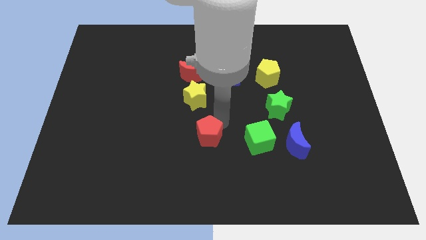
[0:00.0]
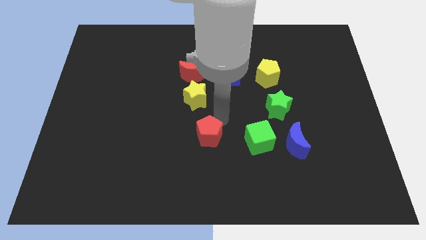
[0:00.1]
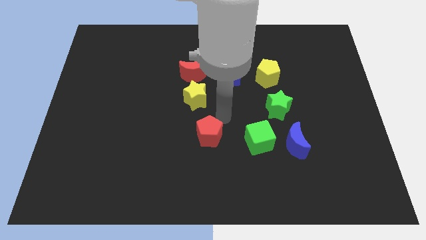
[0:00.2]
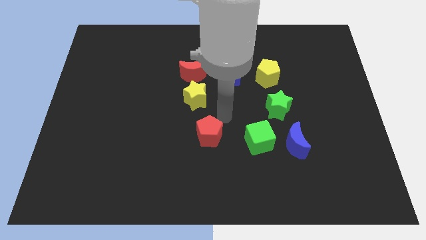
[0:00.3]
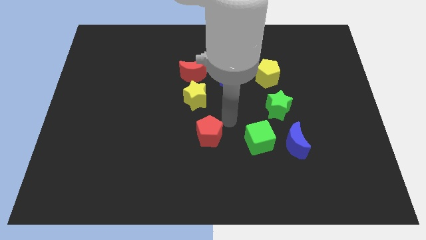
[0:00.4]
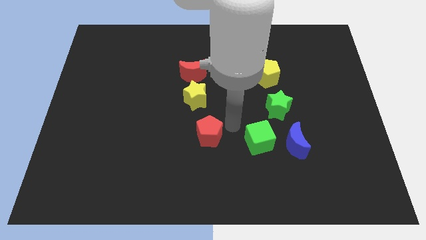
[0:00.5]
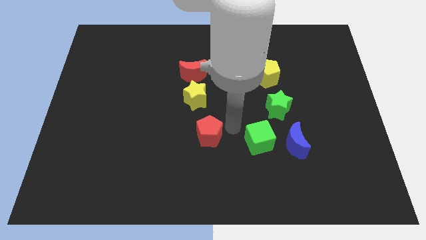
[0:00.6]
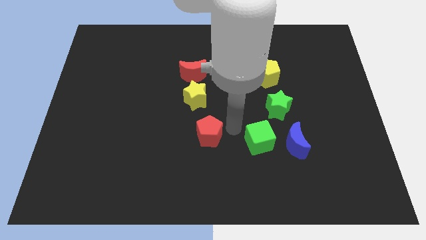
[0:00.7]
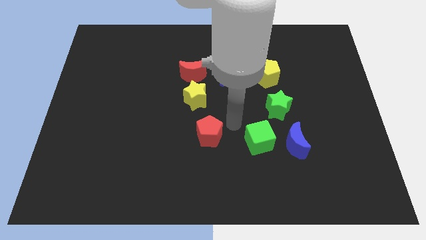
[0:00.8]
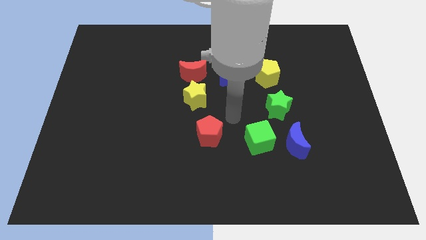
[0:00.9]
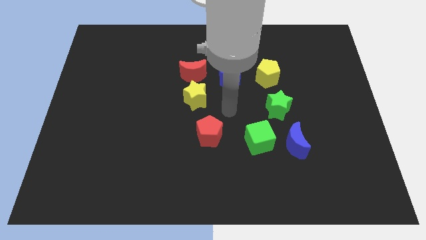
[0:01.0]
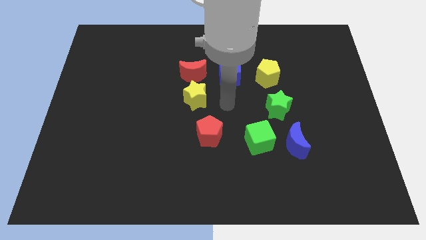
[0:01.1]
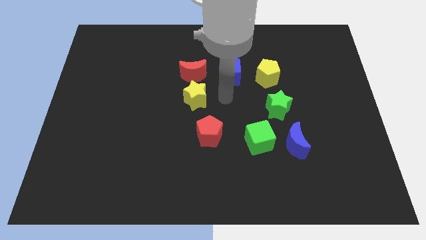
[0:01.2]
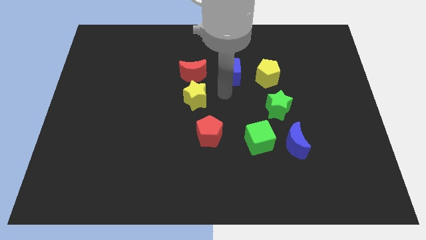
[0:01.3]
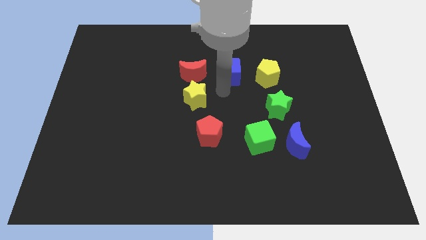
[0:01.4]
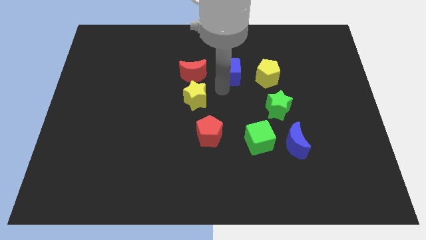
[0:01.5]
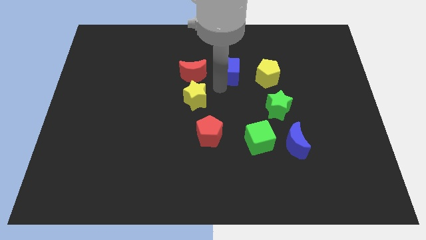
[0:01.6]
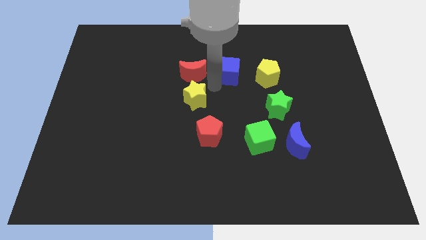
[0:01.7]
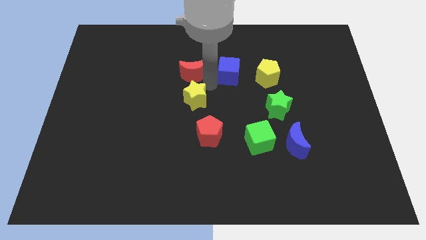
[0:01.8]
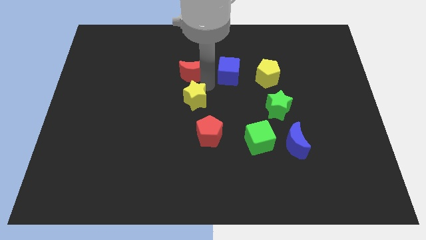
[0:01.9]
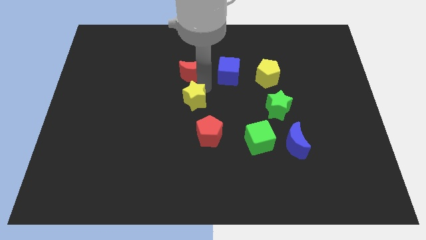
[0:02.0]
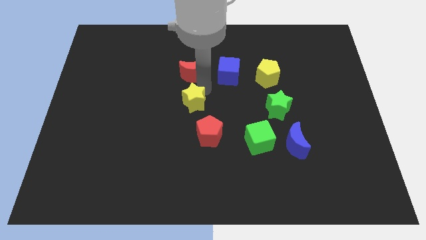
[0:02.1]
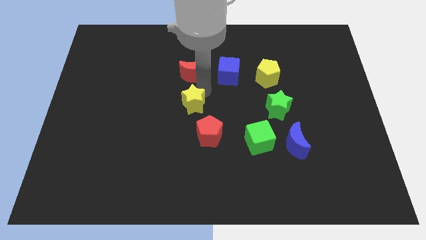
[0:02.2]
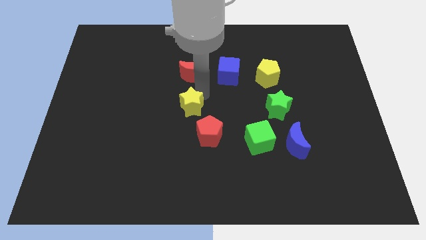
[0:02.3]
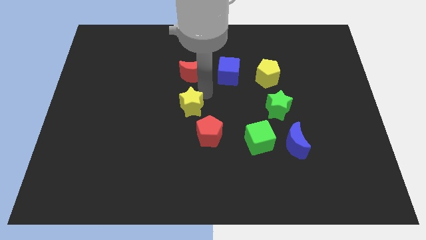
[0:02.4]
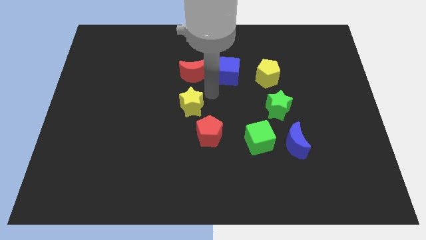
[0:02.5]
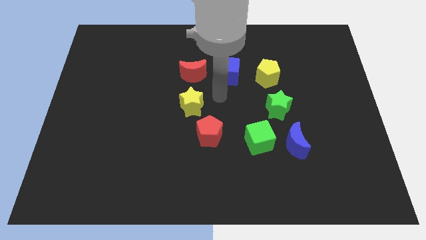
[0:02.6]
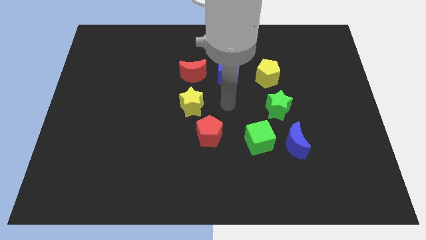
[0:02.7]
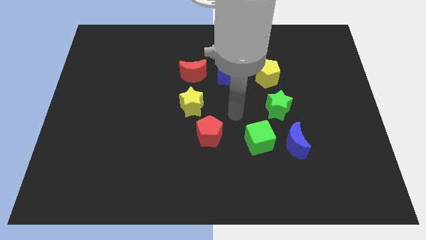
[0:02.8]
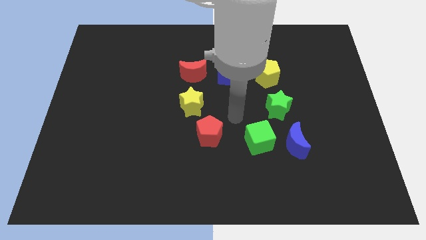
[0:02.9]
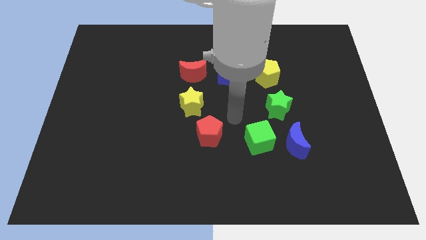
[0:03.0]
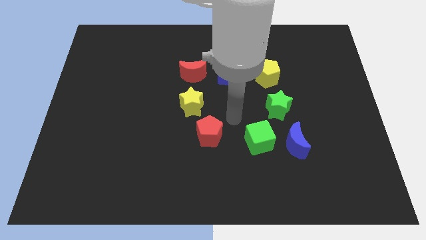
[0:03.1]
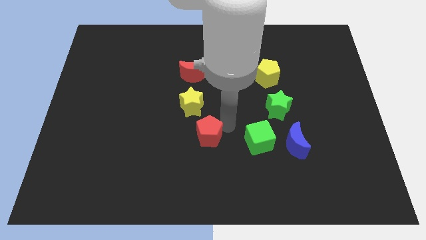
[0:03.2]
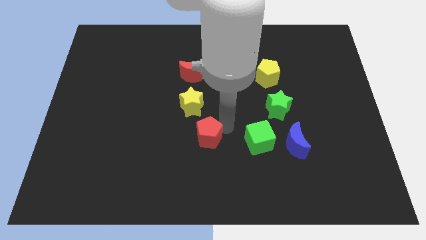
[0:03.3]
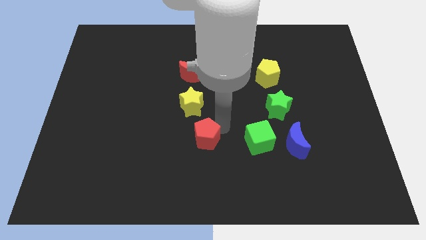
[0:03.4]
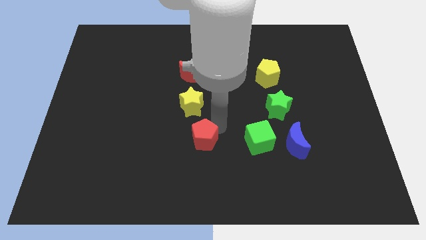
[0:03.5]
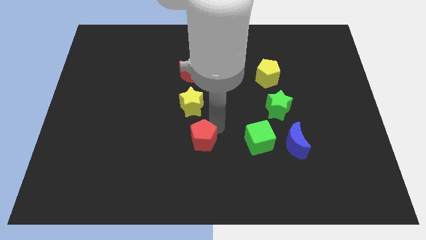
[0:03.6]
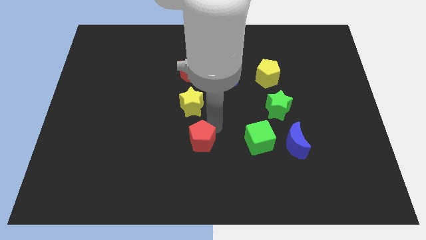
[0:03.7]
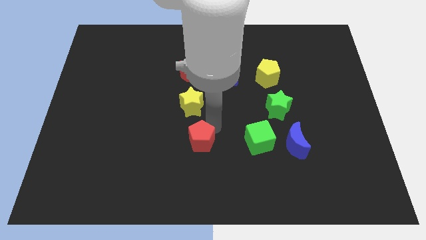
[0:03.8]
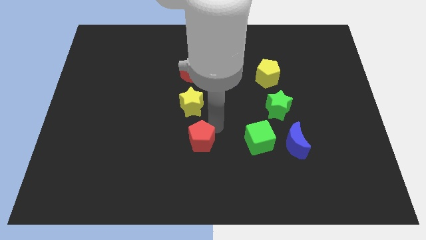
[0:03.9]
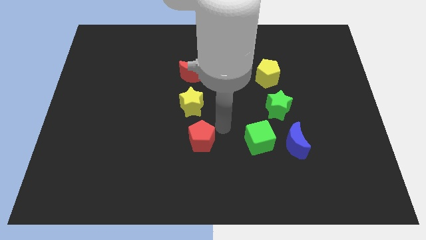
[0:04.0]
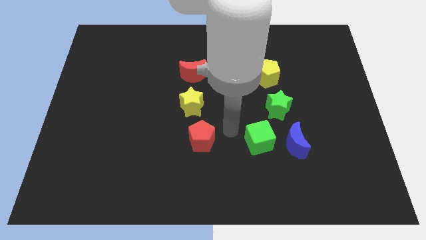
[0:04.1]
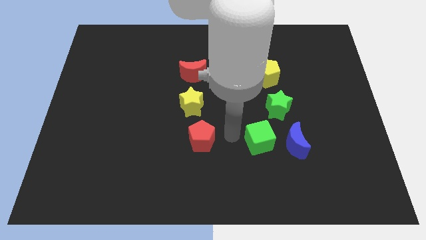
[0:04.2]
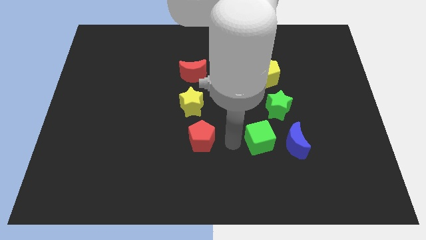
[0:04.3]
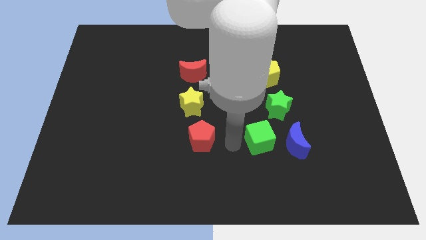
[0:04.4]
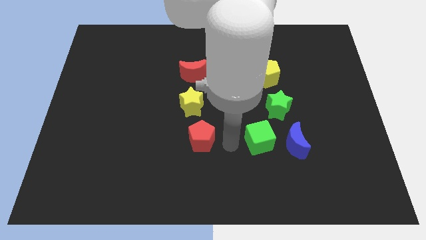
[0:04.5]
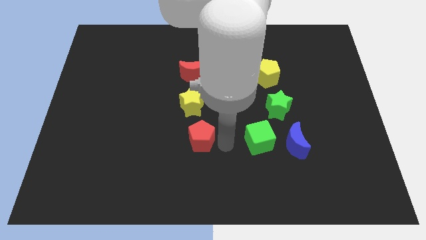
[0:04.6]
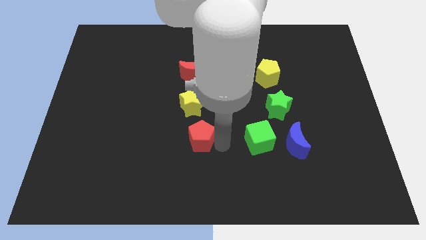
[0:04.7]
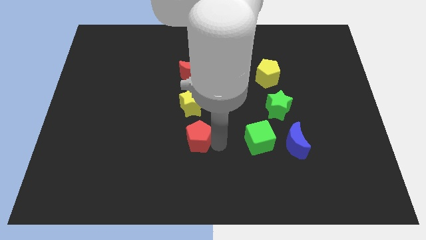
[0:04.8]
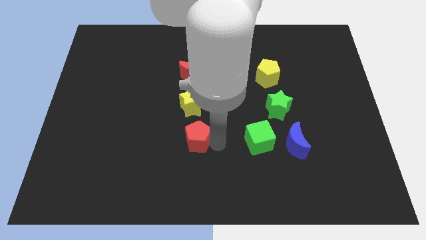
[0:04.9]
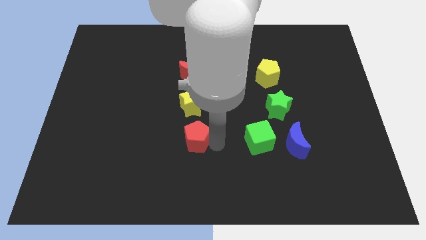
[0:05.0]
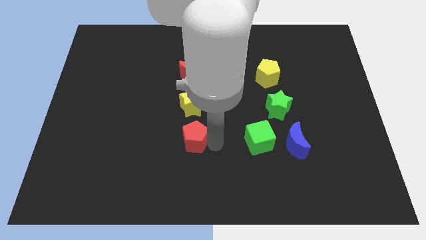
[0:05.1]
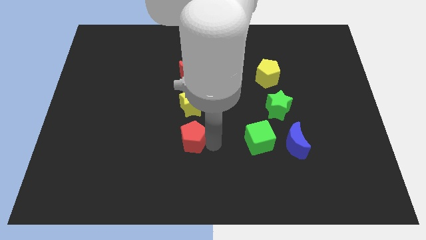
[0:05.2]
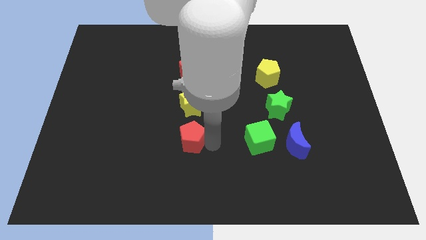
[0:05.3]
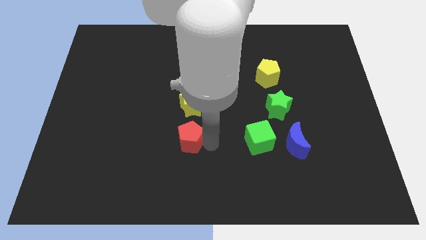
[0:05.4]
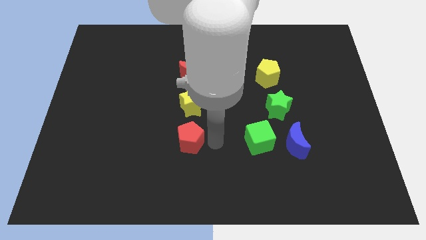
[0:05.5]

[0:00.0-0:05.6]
make a vertical line with the red pentagon yellow star and red moon

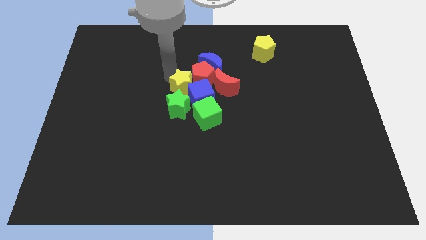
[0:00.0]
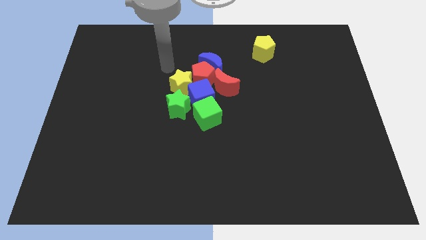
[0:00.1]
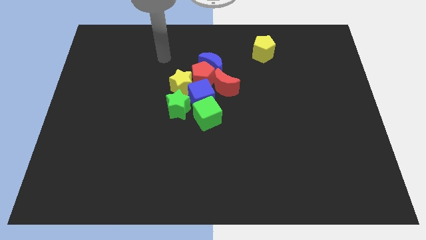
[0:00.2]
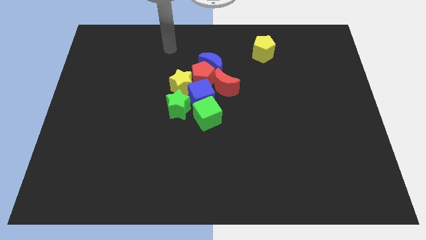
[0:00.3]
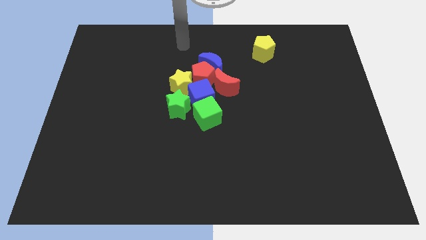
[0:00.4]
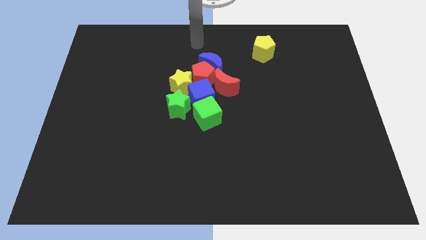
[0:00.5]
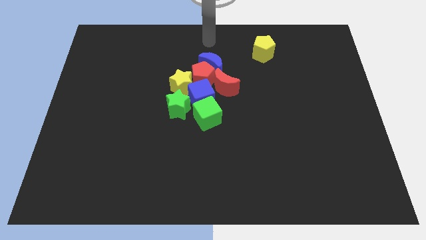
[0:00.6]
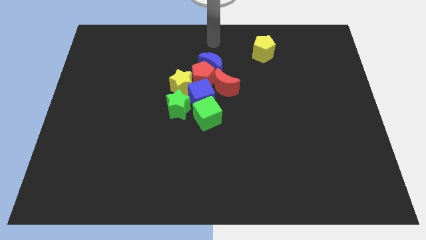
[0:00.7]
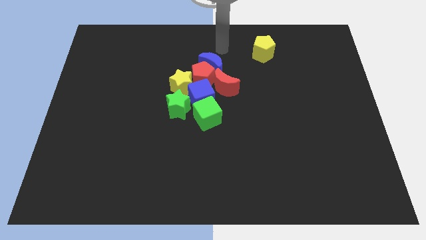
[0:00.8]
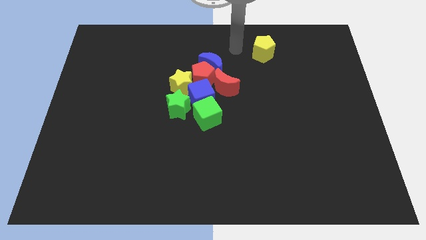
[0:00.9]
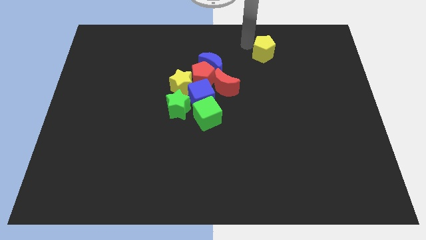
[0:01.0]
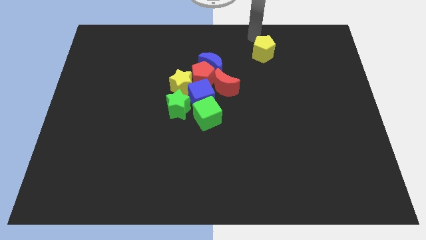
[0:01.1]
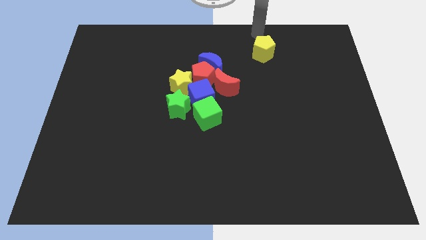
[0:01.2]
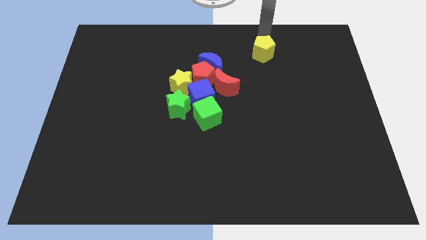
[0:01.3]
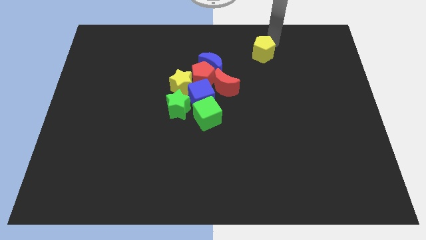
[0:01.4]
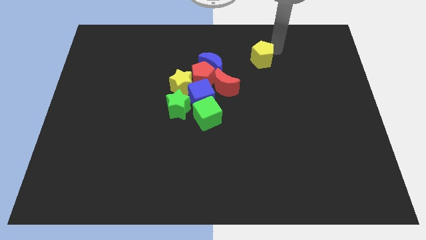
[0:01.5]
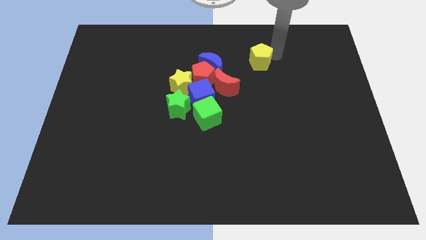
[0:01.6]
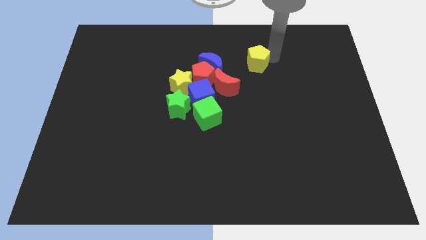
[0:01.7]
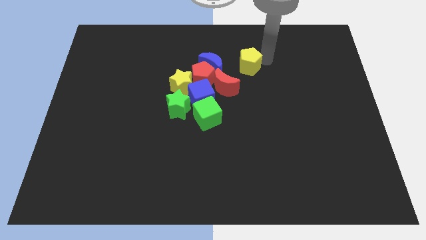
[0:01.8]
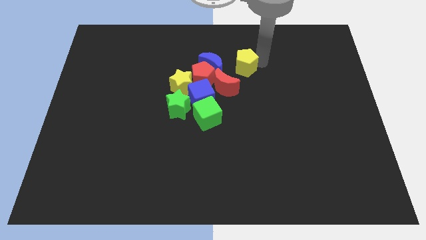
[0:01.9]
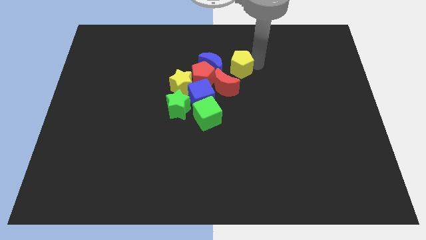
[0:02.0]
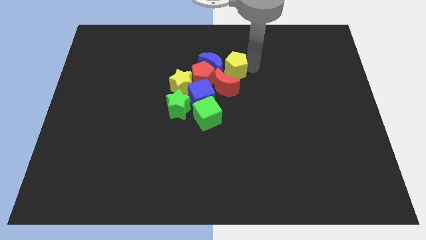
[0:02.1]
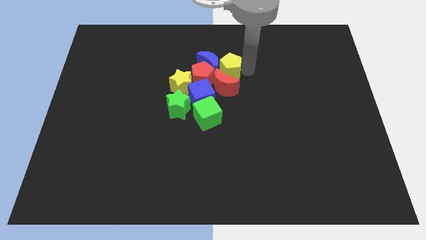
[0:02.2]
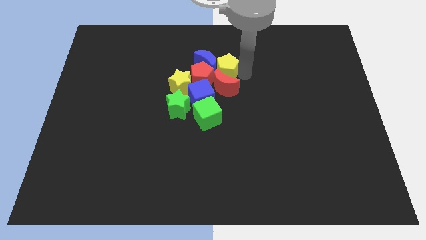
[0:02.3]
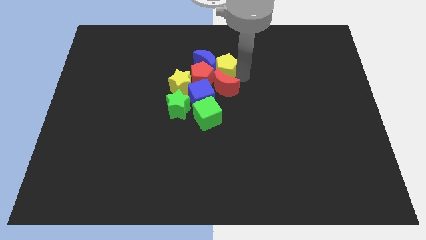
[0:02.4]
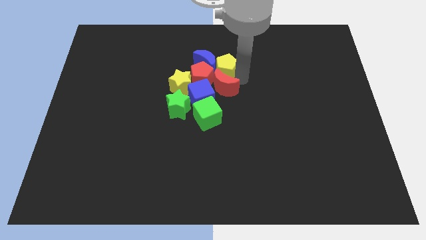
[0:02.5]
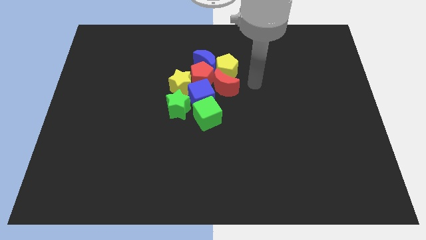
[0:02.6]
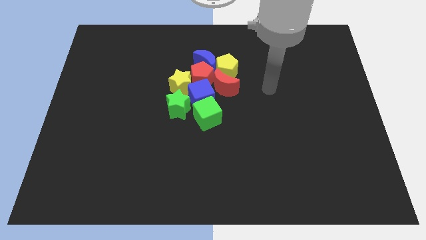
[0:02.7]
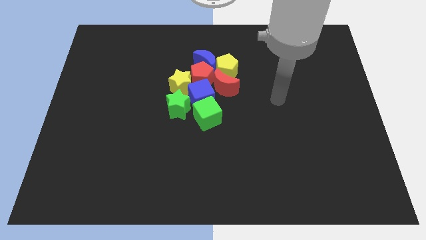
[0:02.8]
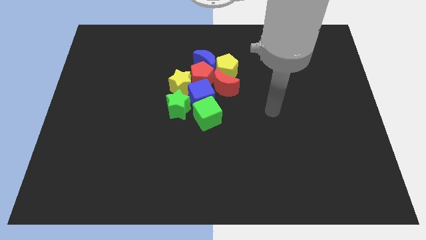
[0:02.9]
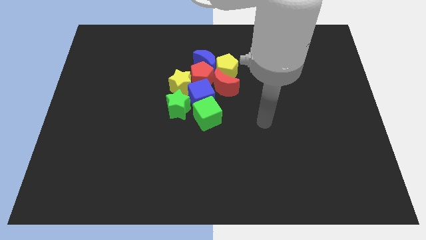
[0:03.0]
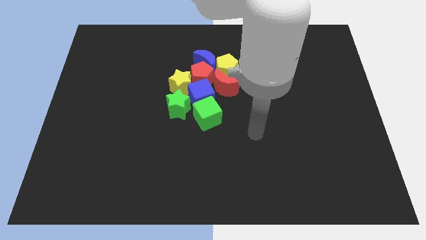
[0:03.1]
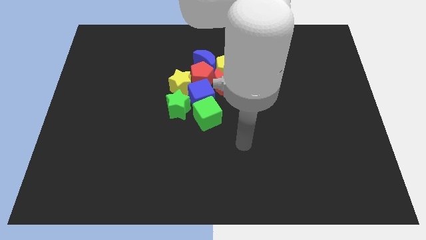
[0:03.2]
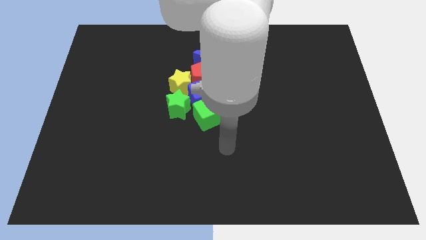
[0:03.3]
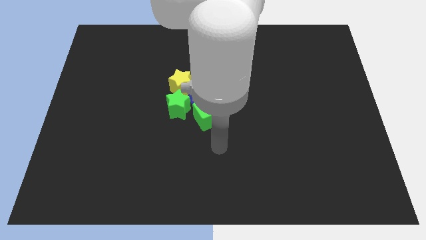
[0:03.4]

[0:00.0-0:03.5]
move yellow pentagon to the top of red crescent
